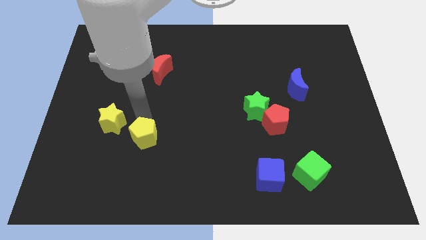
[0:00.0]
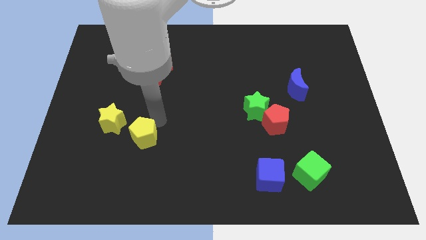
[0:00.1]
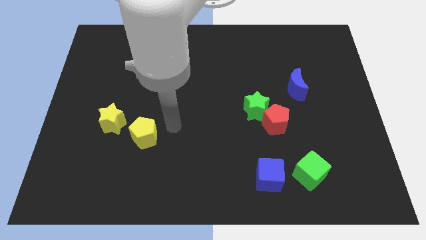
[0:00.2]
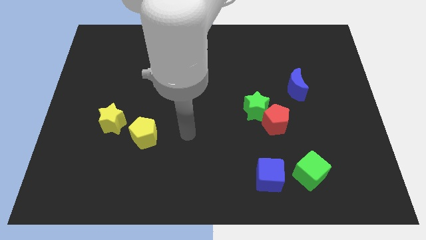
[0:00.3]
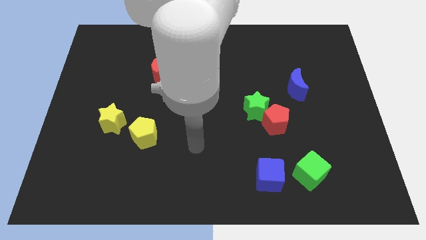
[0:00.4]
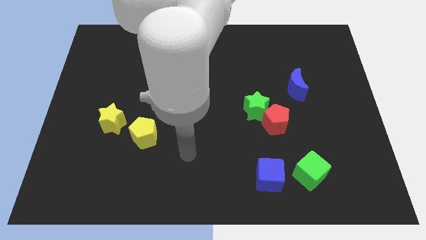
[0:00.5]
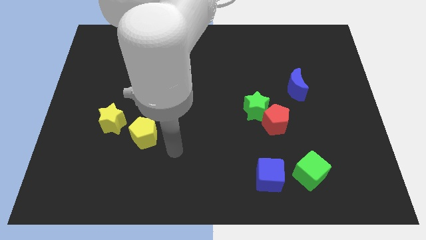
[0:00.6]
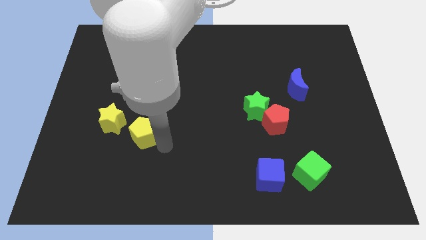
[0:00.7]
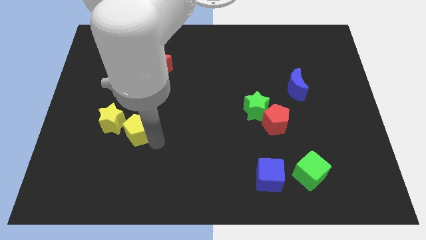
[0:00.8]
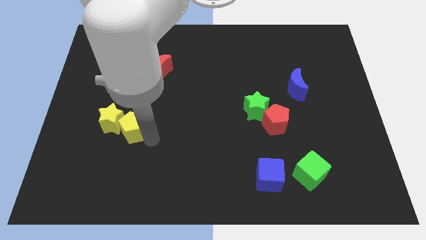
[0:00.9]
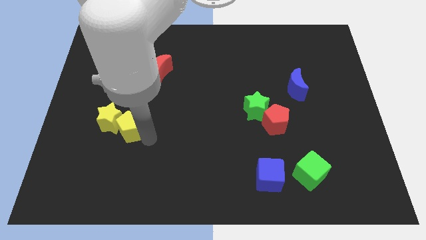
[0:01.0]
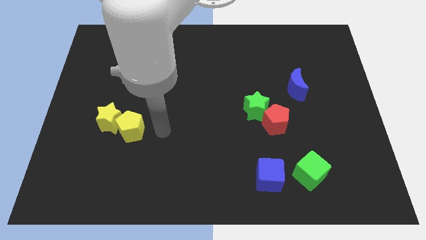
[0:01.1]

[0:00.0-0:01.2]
move the yellow pentagon into the yellow star

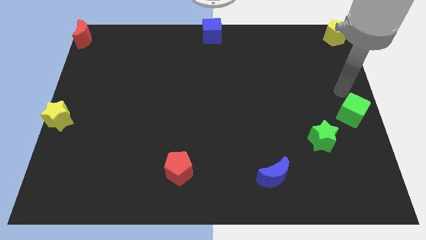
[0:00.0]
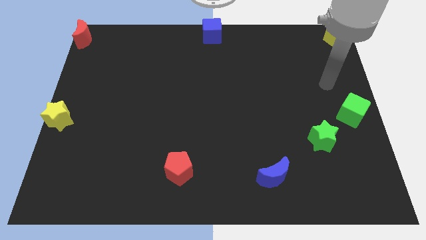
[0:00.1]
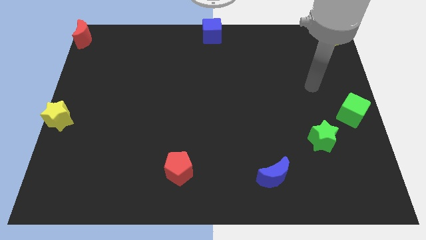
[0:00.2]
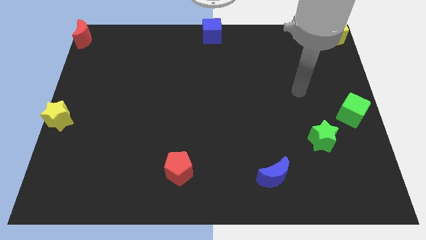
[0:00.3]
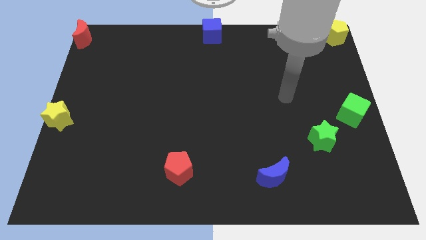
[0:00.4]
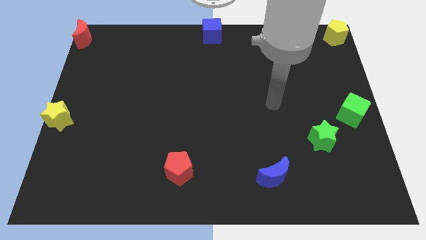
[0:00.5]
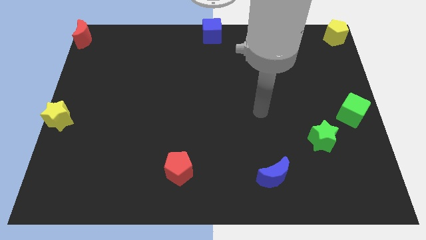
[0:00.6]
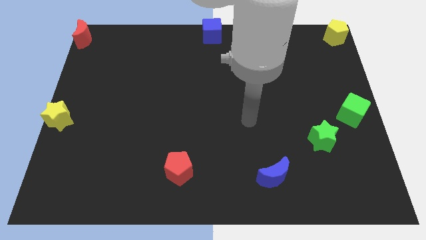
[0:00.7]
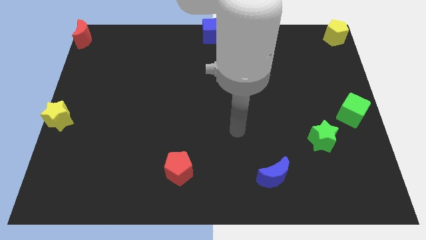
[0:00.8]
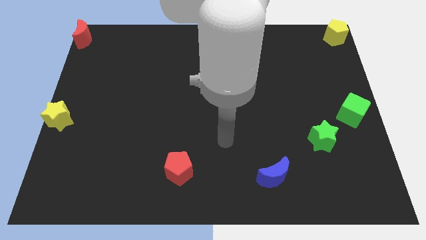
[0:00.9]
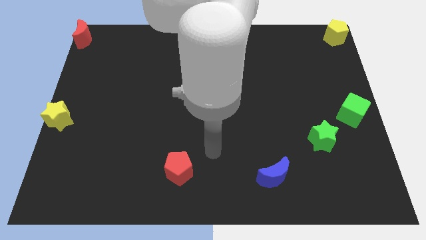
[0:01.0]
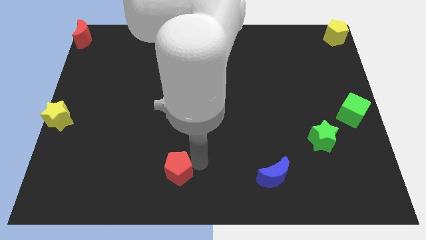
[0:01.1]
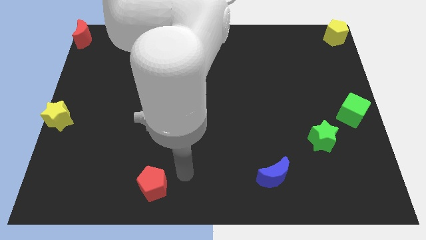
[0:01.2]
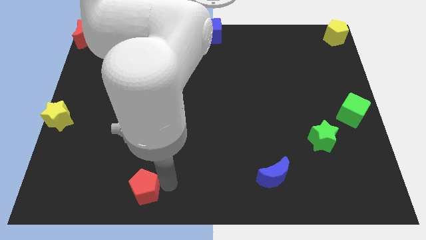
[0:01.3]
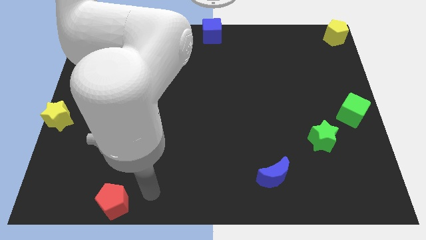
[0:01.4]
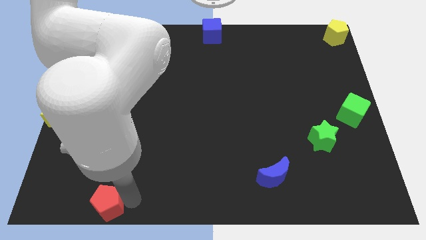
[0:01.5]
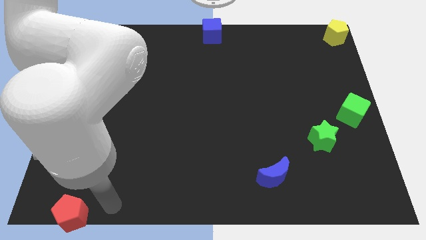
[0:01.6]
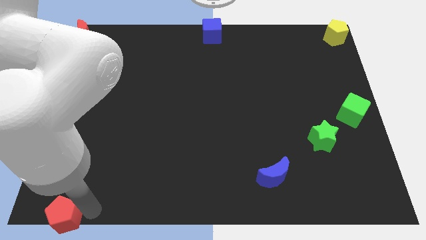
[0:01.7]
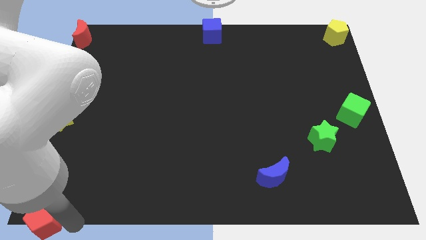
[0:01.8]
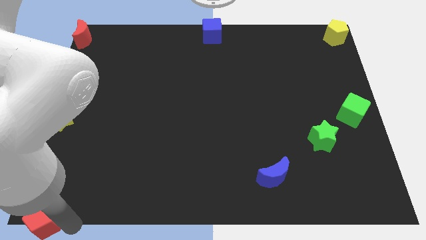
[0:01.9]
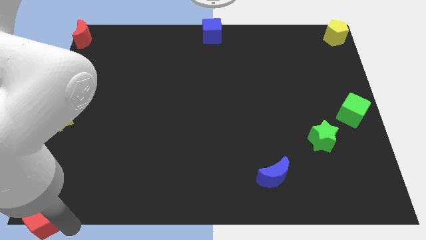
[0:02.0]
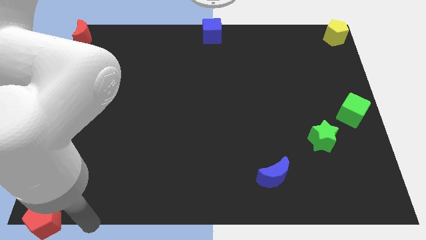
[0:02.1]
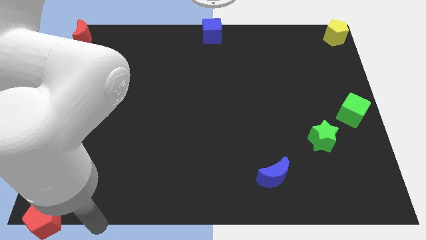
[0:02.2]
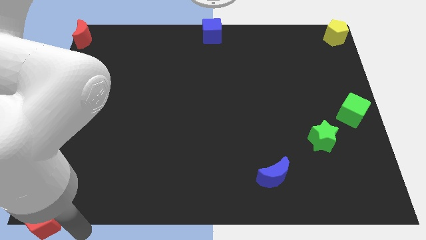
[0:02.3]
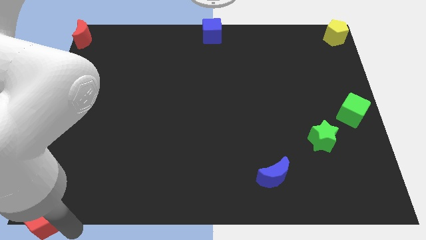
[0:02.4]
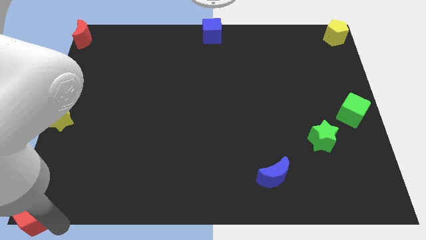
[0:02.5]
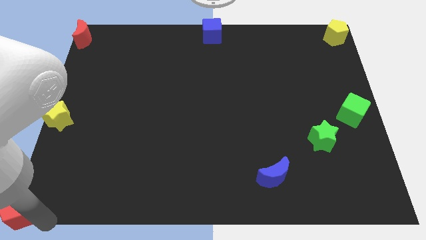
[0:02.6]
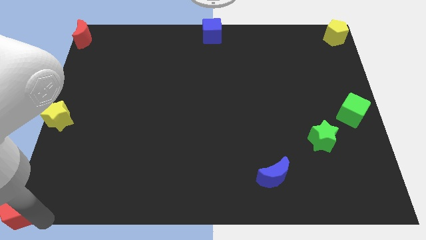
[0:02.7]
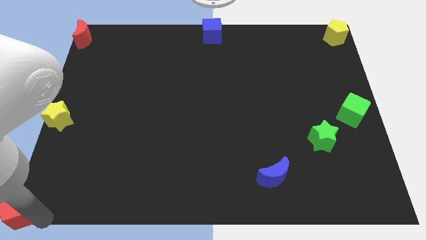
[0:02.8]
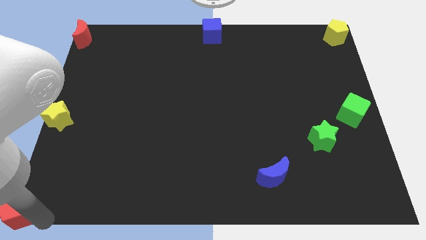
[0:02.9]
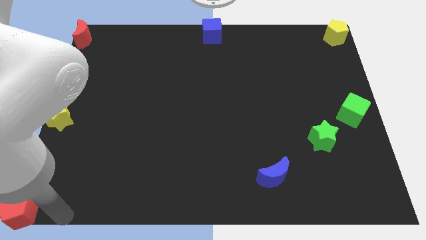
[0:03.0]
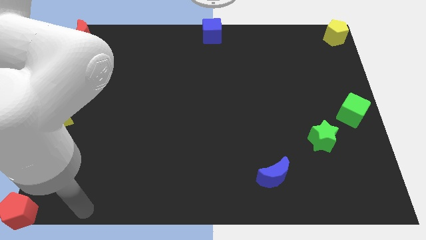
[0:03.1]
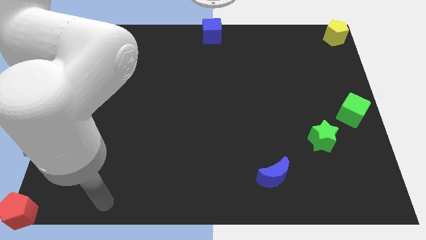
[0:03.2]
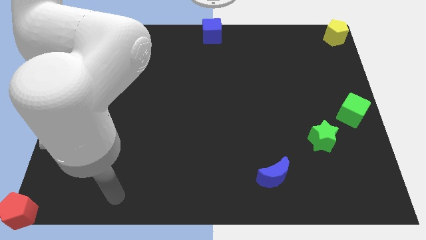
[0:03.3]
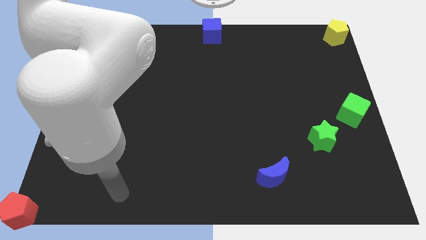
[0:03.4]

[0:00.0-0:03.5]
move the red pentagon to the bottom left corner

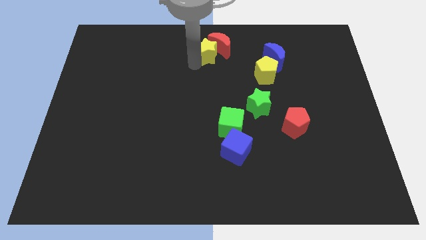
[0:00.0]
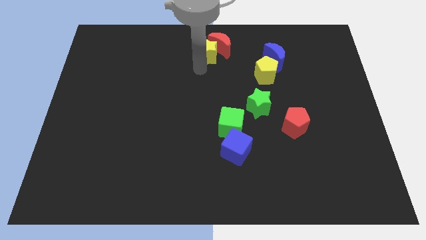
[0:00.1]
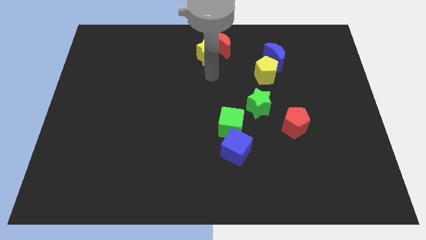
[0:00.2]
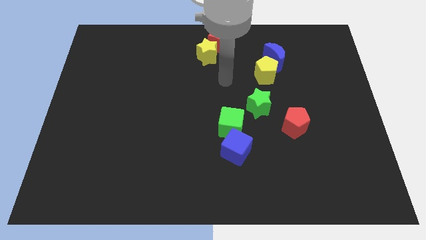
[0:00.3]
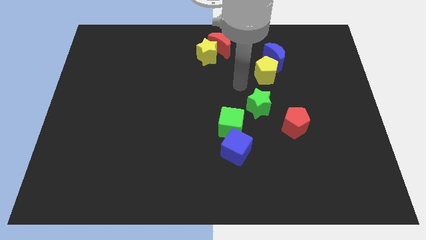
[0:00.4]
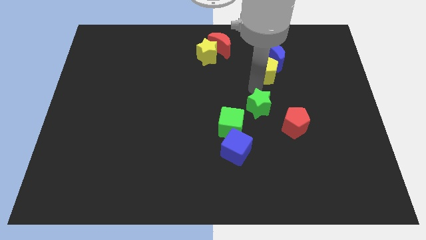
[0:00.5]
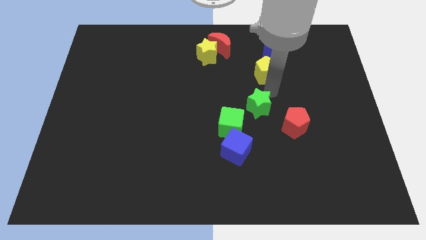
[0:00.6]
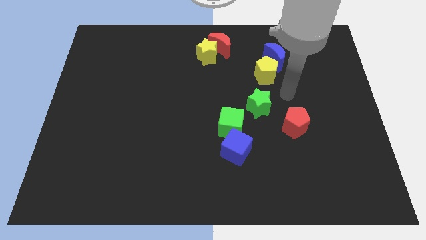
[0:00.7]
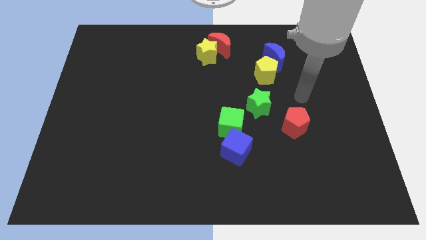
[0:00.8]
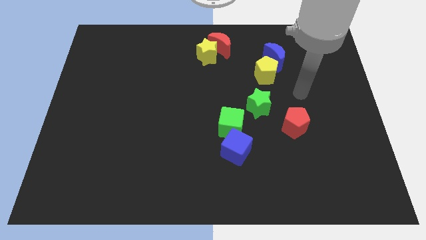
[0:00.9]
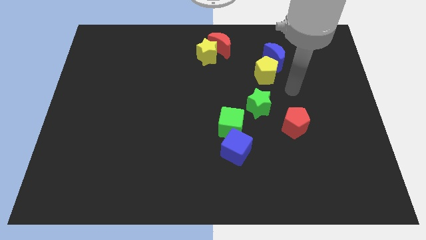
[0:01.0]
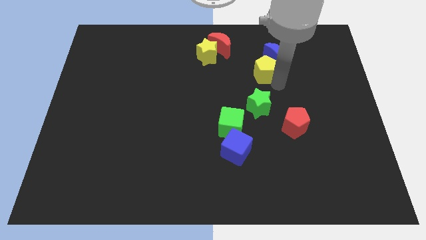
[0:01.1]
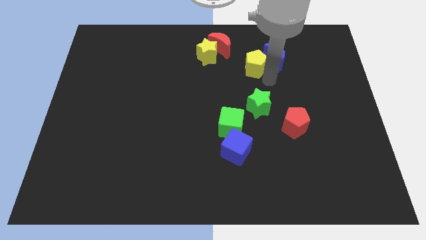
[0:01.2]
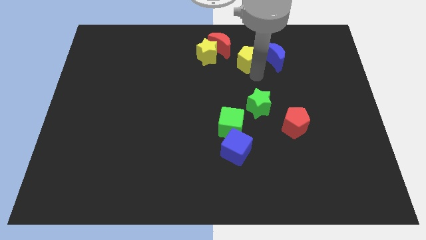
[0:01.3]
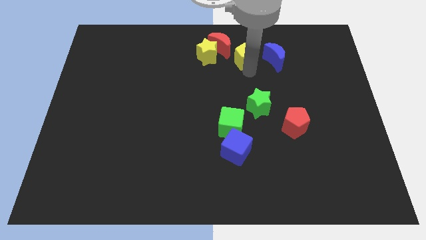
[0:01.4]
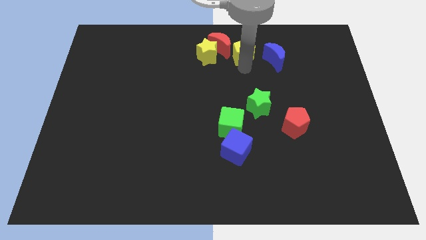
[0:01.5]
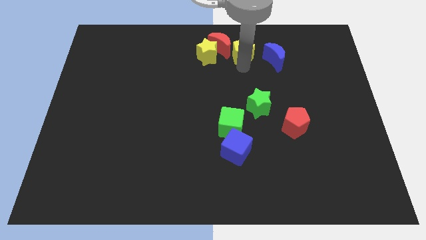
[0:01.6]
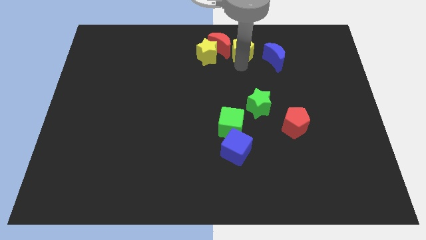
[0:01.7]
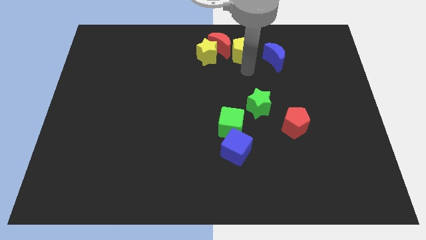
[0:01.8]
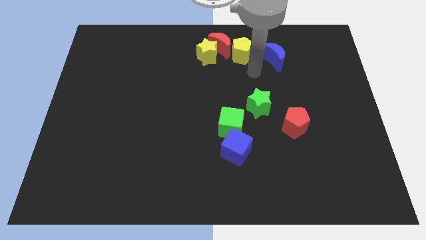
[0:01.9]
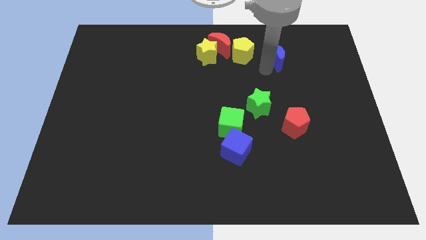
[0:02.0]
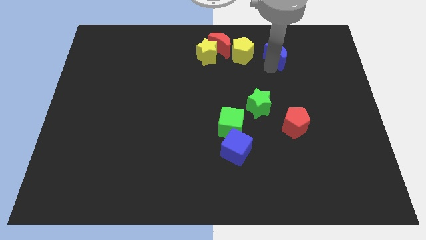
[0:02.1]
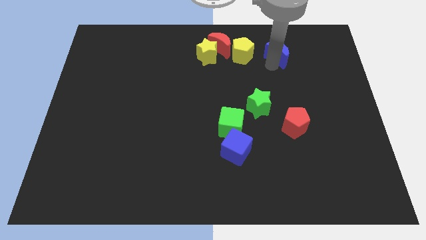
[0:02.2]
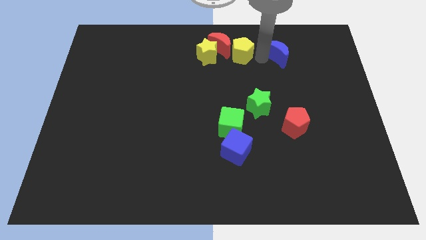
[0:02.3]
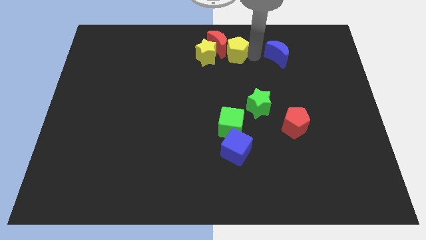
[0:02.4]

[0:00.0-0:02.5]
place the yellow pentagon in between the red moon and blue moon

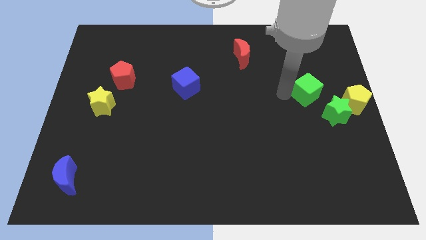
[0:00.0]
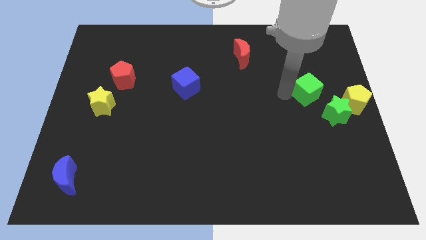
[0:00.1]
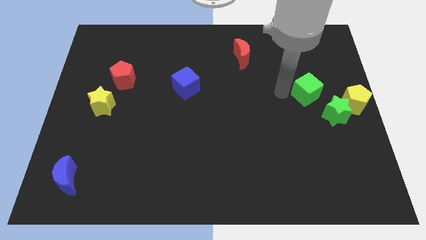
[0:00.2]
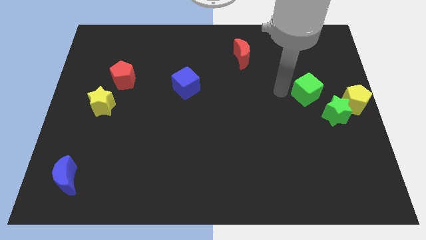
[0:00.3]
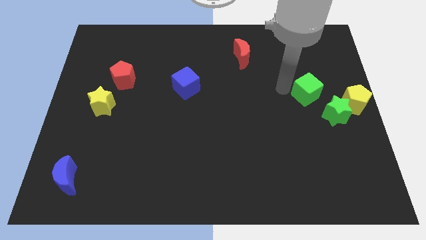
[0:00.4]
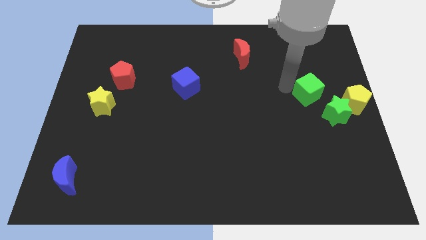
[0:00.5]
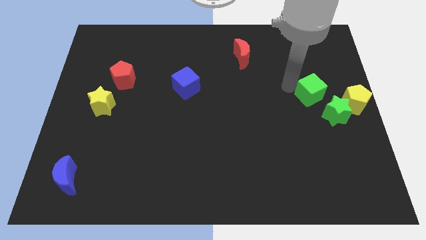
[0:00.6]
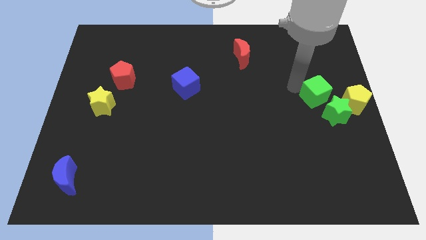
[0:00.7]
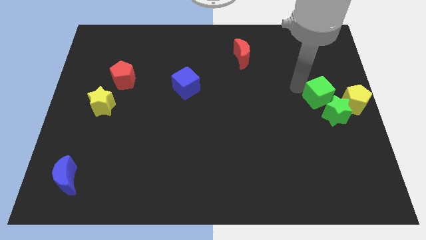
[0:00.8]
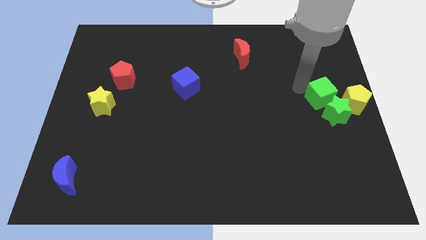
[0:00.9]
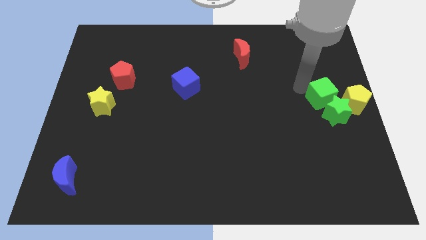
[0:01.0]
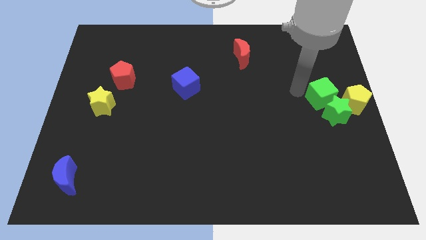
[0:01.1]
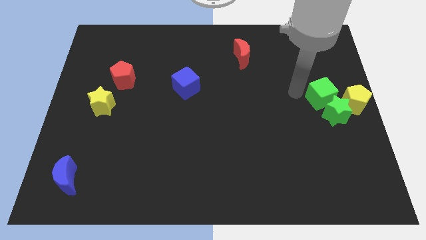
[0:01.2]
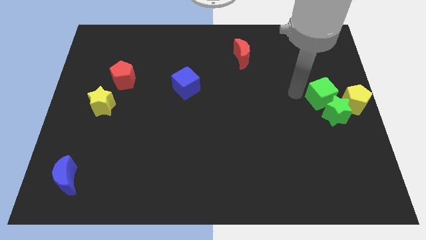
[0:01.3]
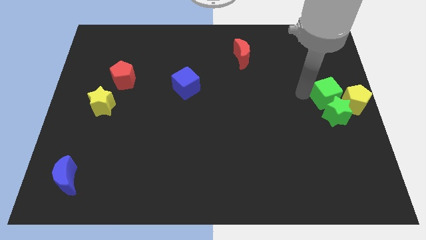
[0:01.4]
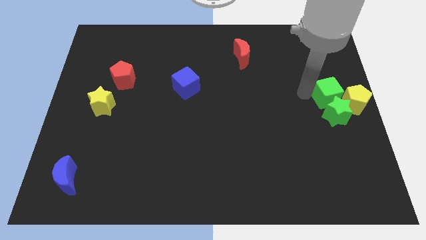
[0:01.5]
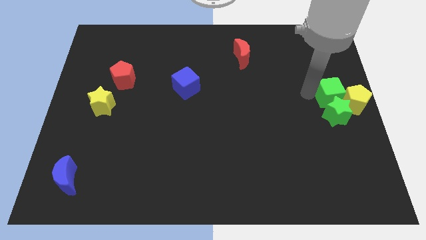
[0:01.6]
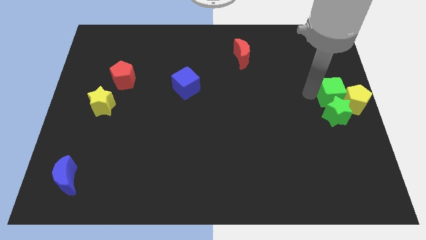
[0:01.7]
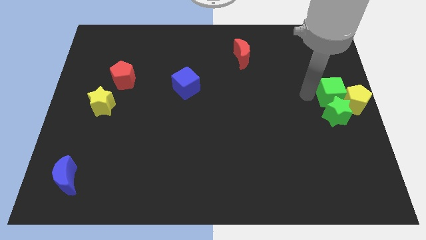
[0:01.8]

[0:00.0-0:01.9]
place the green cube top to the green star
